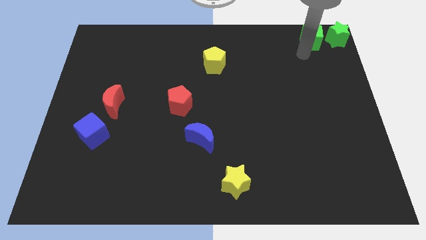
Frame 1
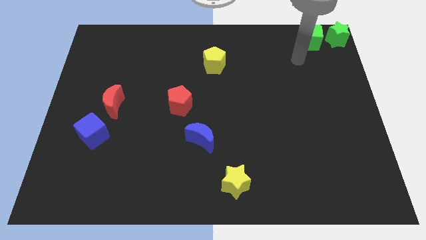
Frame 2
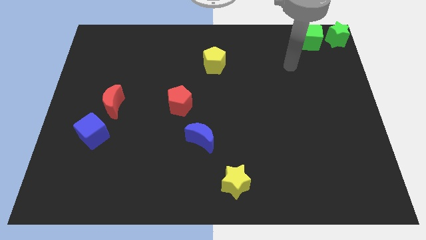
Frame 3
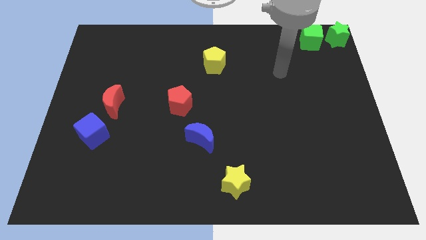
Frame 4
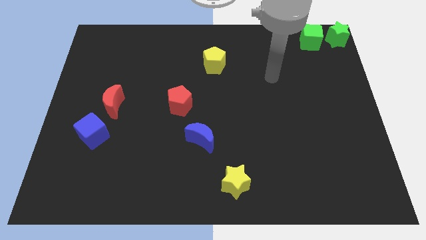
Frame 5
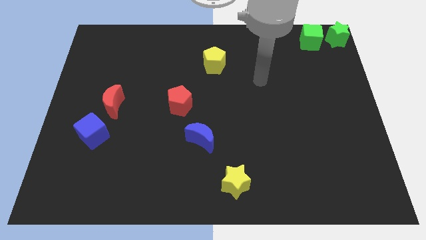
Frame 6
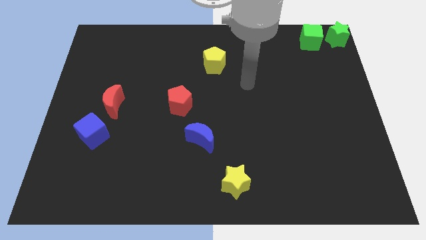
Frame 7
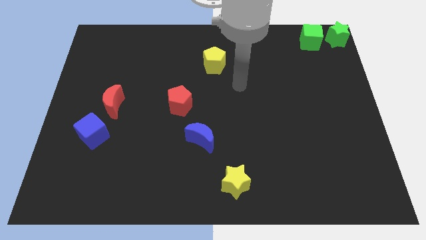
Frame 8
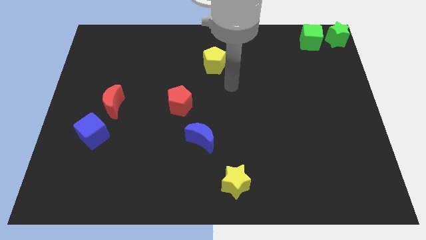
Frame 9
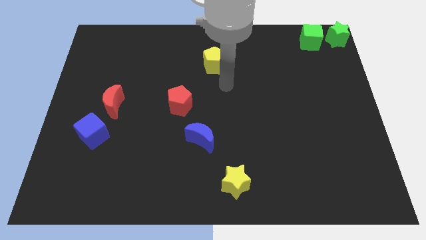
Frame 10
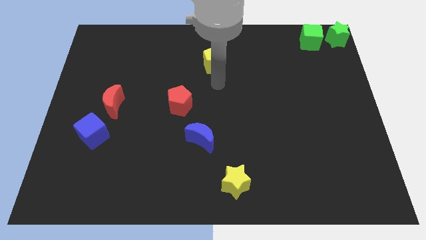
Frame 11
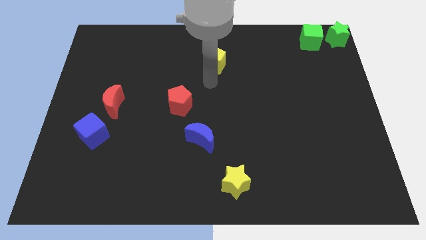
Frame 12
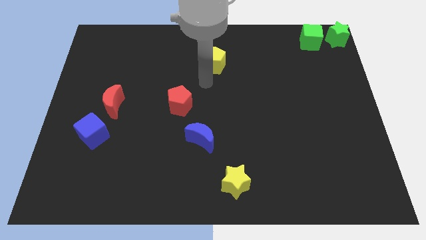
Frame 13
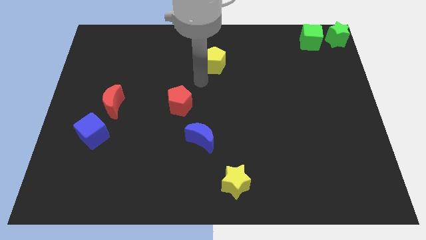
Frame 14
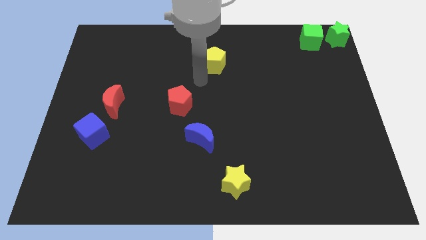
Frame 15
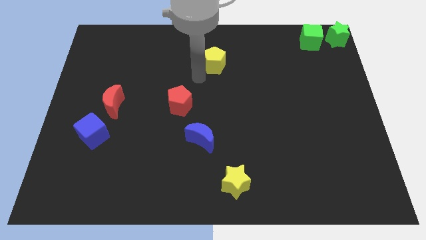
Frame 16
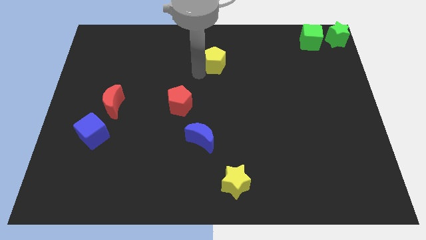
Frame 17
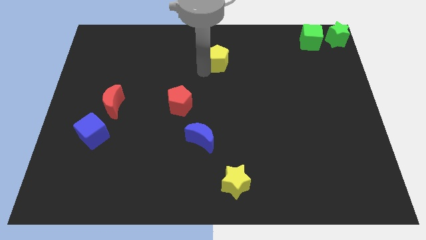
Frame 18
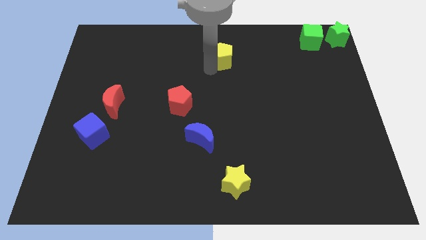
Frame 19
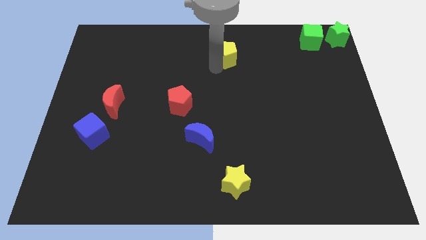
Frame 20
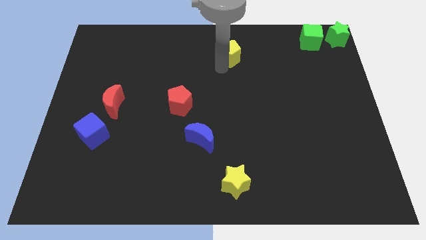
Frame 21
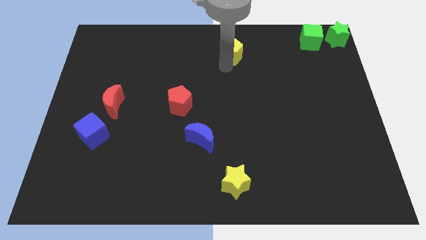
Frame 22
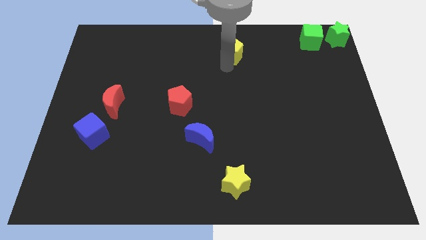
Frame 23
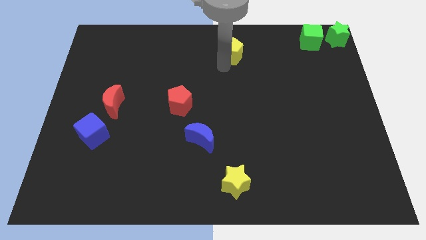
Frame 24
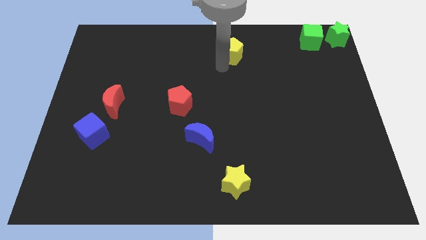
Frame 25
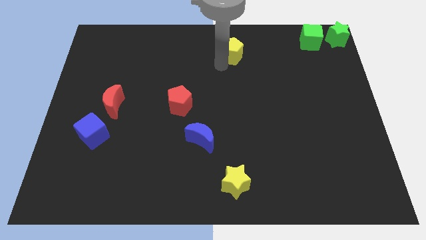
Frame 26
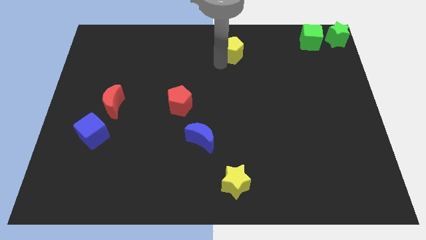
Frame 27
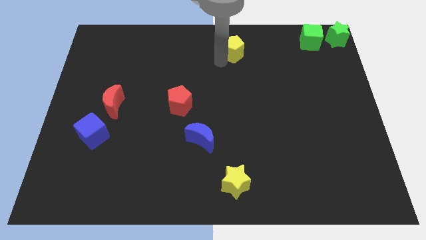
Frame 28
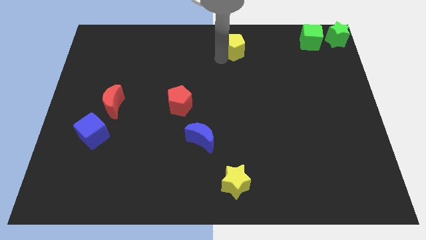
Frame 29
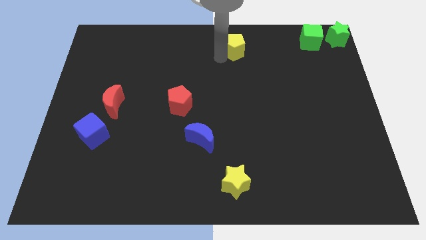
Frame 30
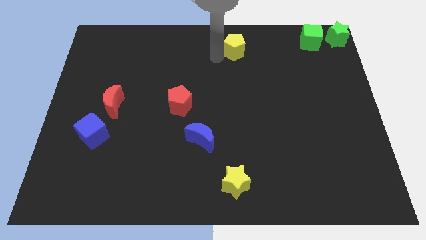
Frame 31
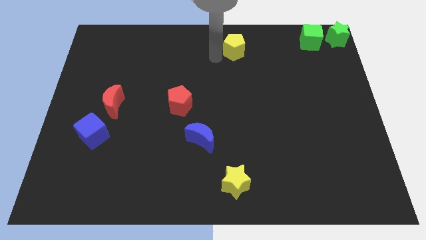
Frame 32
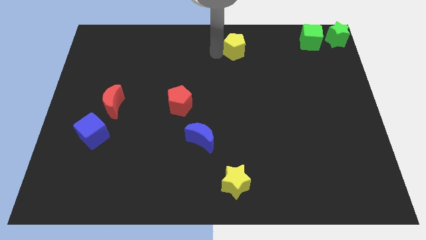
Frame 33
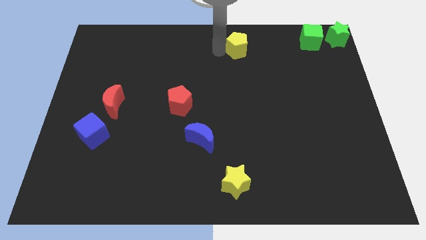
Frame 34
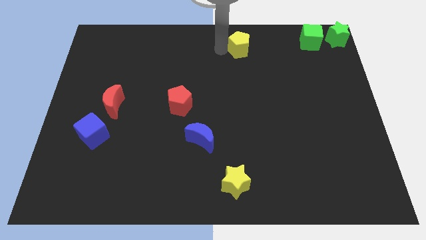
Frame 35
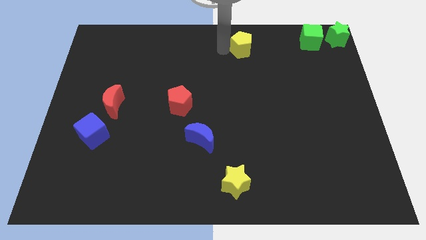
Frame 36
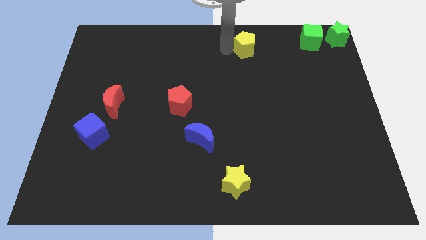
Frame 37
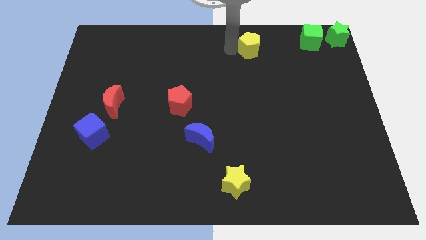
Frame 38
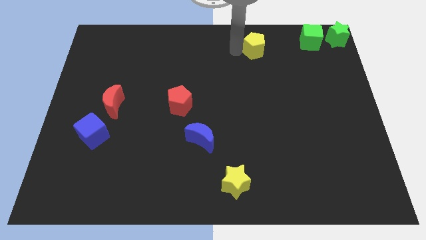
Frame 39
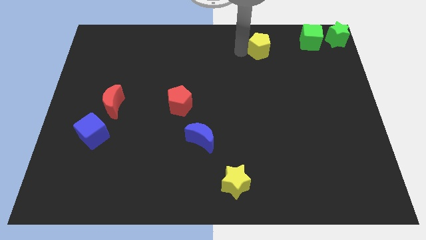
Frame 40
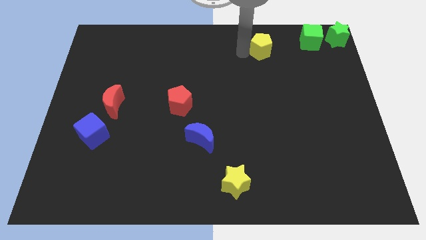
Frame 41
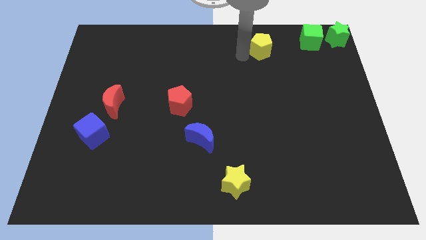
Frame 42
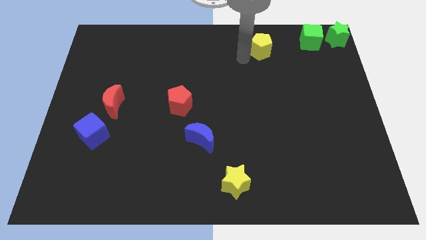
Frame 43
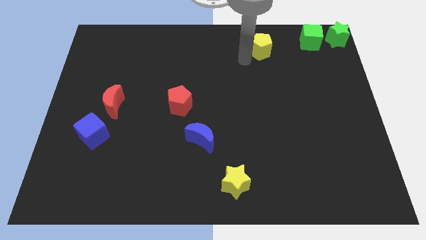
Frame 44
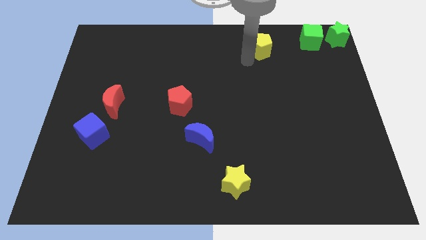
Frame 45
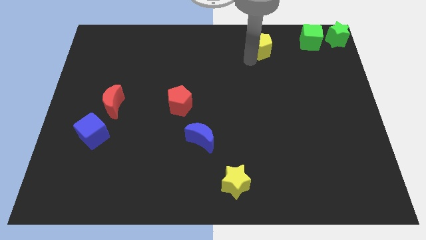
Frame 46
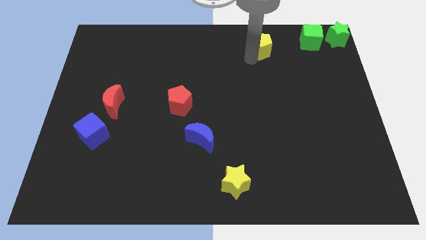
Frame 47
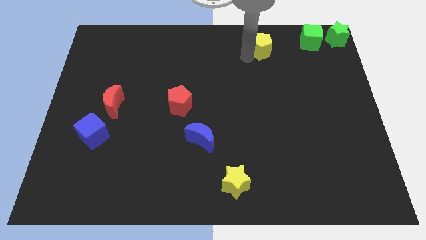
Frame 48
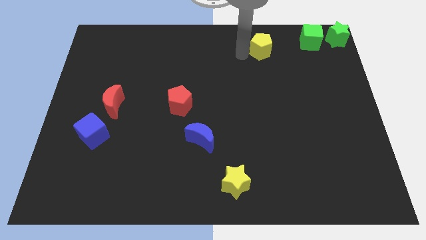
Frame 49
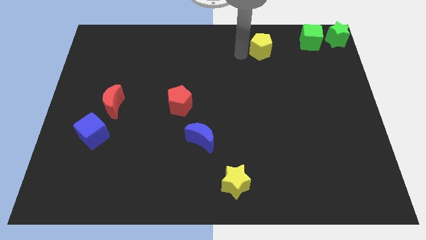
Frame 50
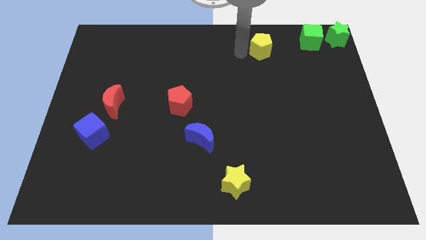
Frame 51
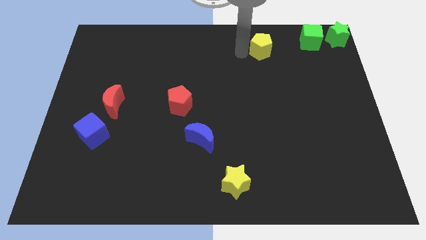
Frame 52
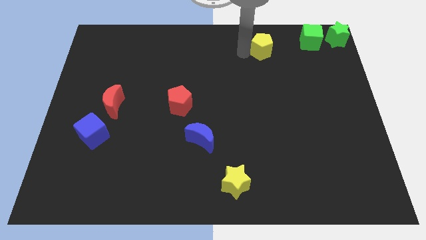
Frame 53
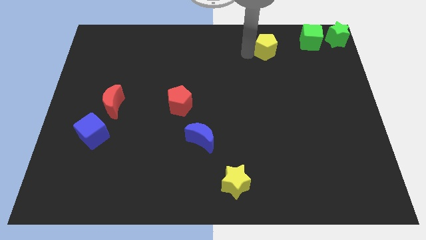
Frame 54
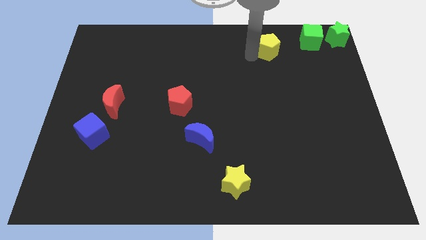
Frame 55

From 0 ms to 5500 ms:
move the yellow pentagon towards the top right

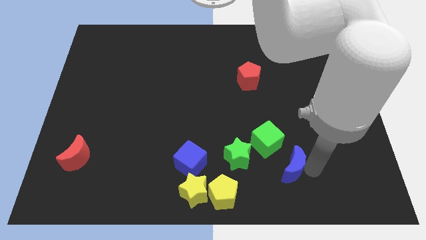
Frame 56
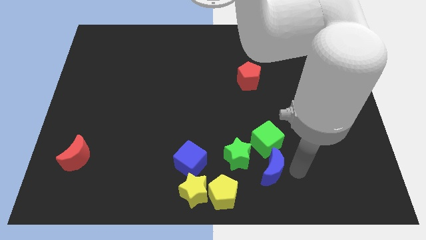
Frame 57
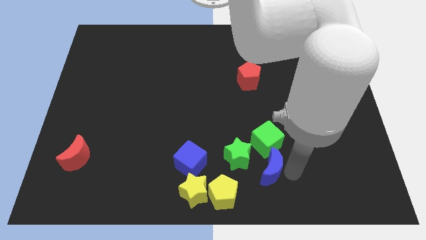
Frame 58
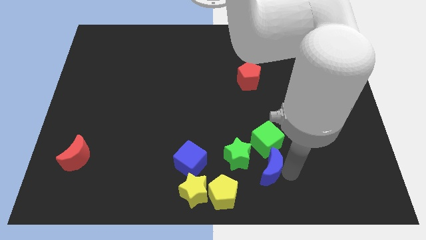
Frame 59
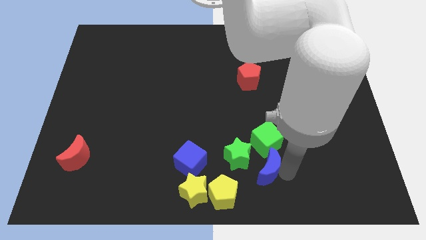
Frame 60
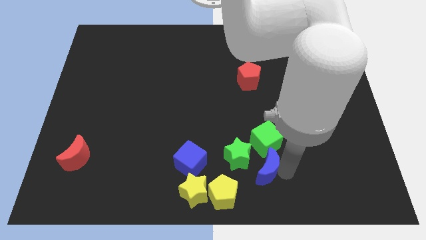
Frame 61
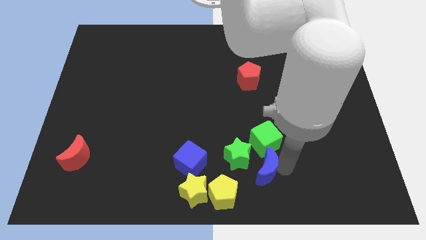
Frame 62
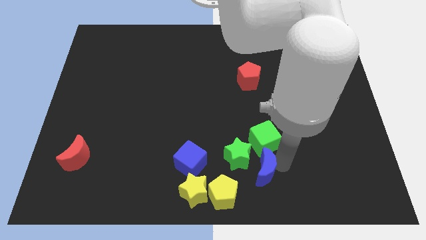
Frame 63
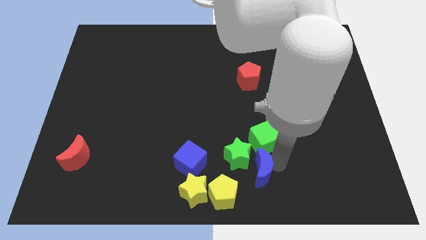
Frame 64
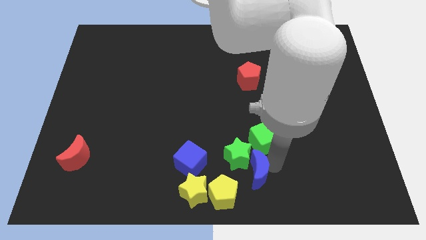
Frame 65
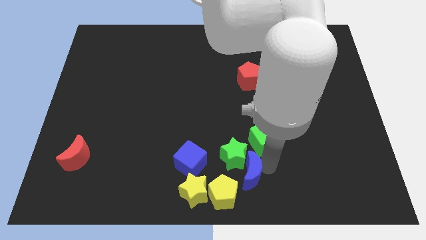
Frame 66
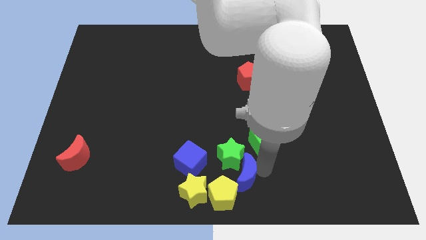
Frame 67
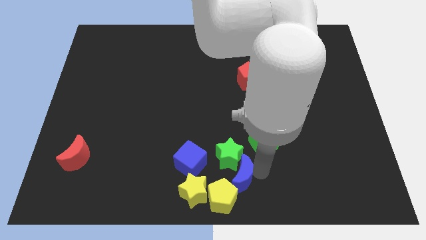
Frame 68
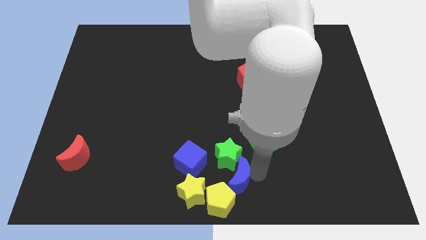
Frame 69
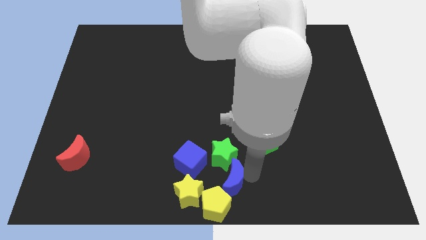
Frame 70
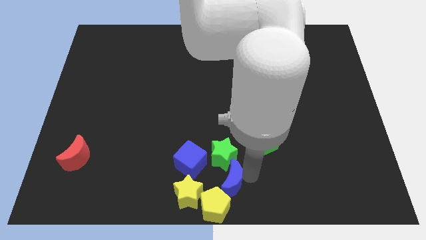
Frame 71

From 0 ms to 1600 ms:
push blue moon into group of blocks

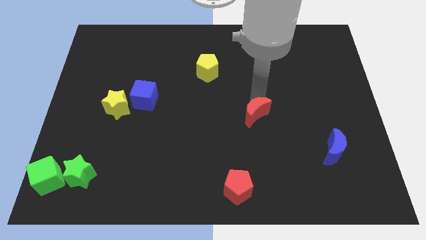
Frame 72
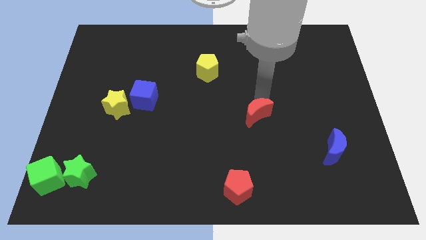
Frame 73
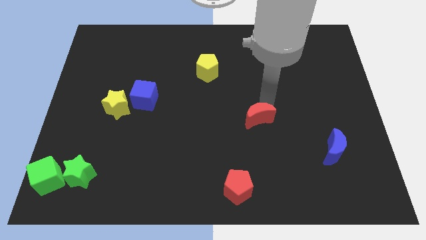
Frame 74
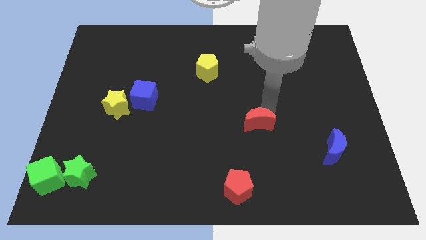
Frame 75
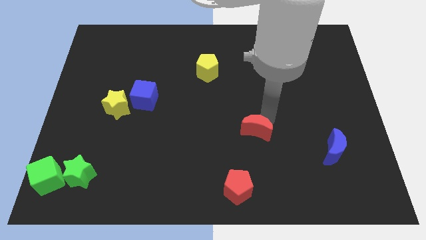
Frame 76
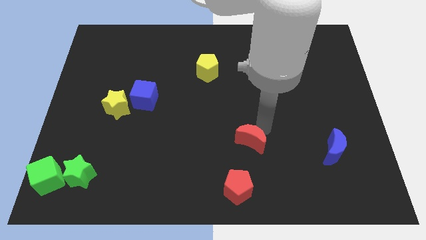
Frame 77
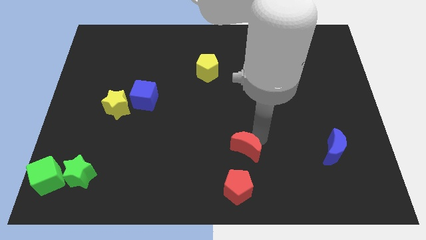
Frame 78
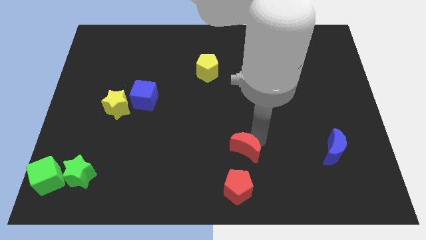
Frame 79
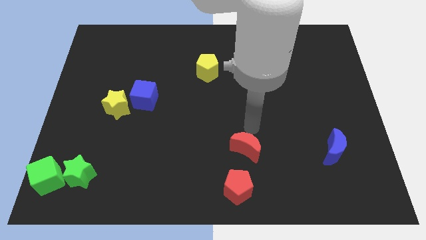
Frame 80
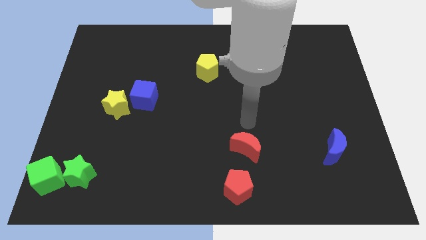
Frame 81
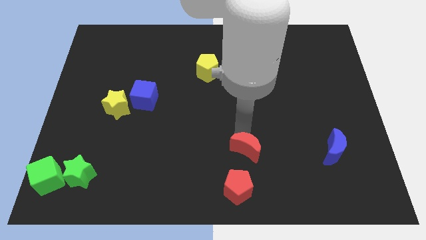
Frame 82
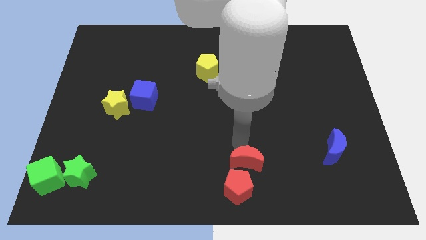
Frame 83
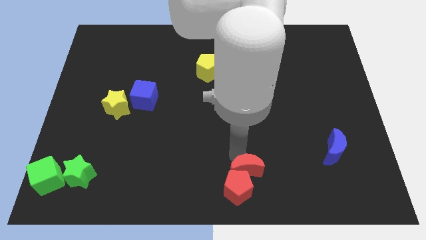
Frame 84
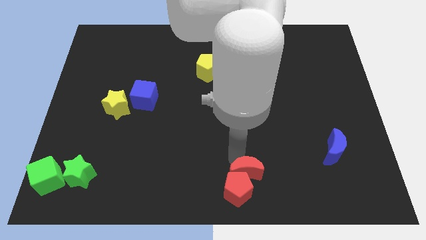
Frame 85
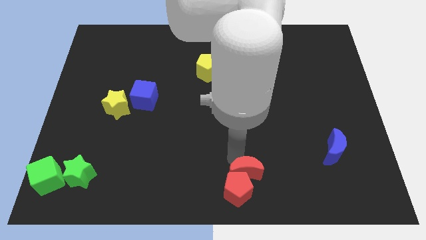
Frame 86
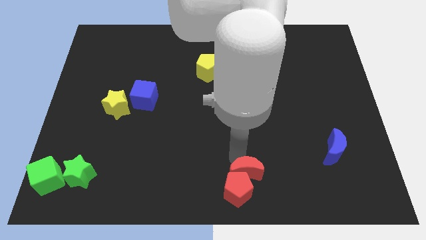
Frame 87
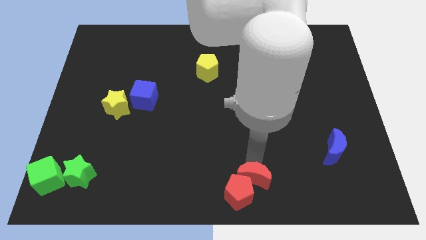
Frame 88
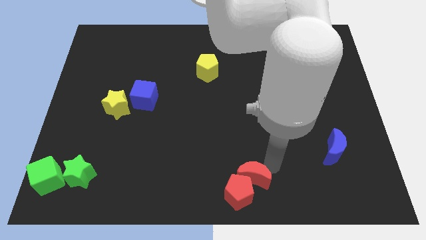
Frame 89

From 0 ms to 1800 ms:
push red moon into the red pentagon
